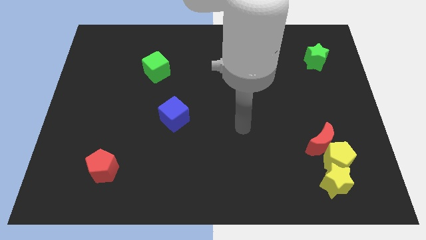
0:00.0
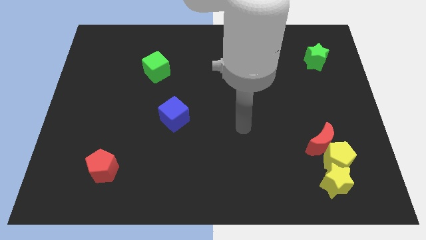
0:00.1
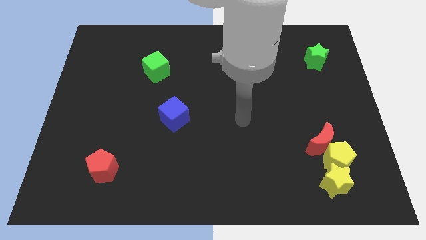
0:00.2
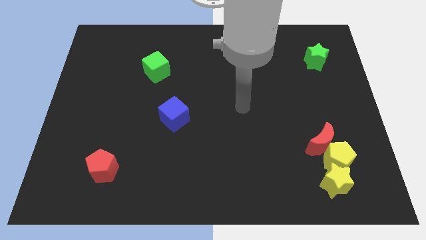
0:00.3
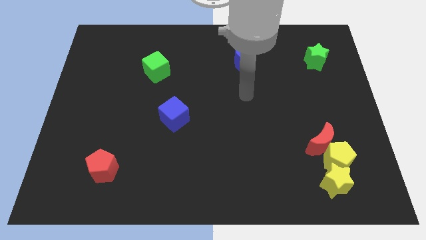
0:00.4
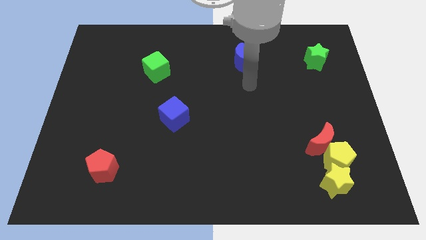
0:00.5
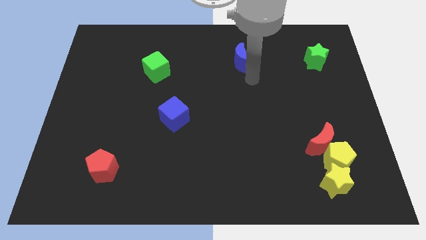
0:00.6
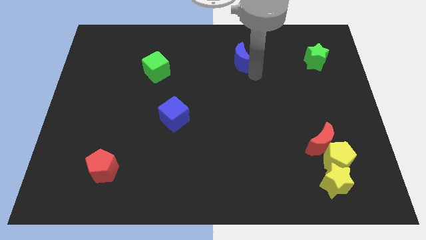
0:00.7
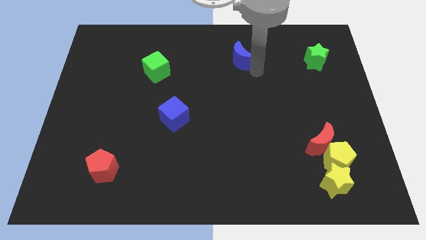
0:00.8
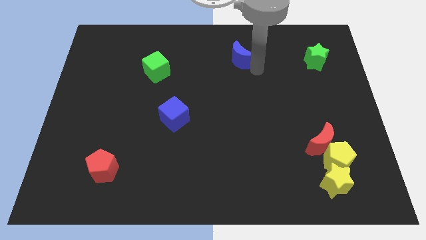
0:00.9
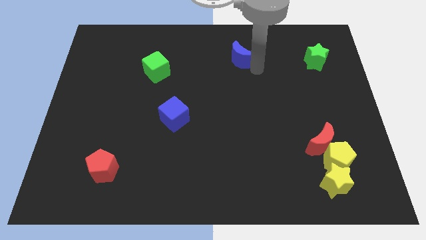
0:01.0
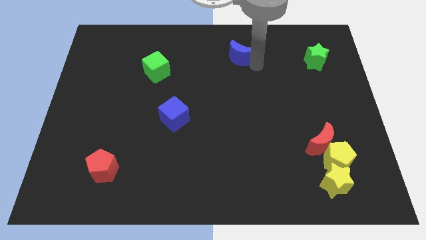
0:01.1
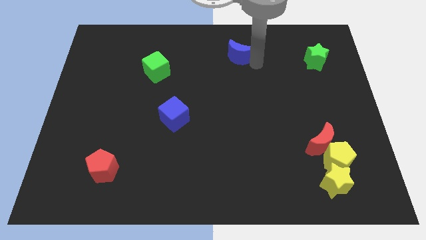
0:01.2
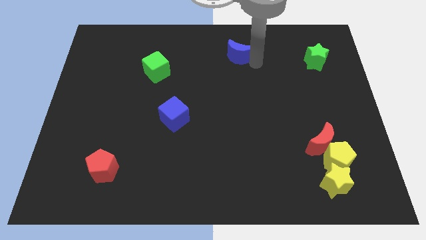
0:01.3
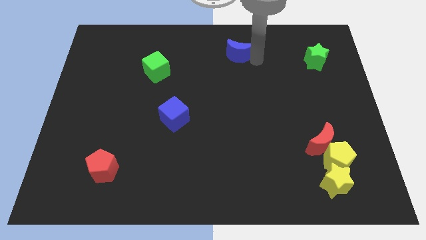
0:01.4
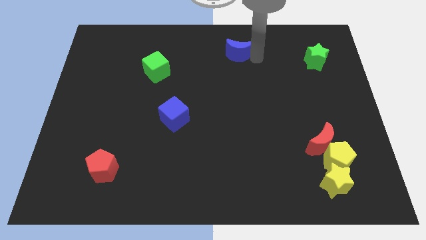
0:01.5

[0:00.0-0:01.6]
slide the blue moon horizontally to the left side of the green star

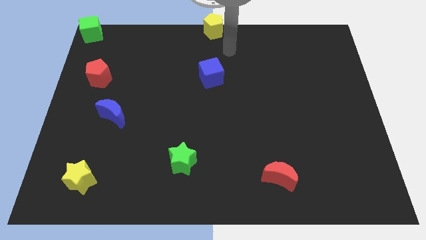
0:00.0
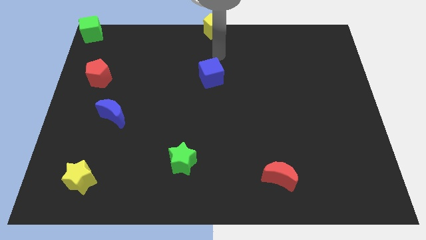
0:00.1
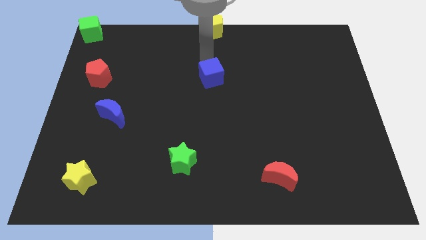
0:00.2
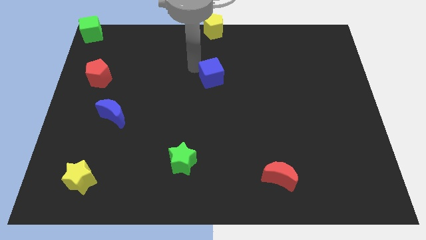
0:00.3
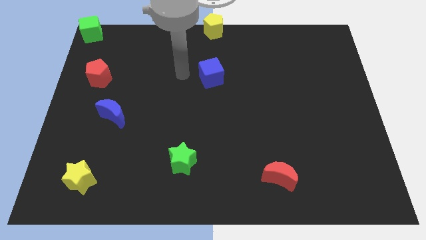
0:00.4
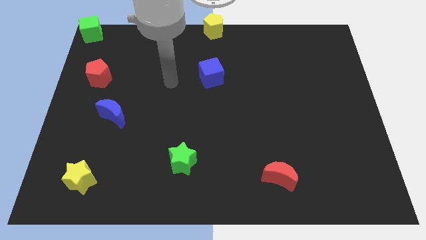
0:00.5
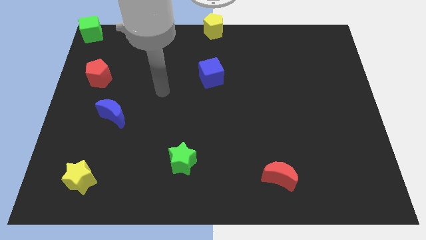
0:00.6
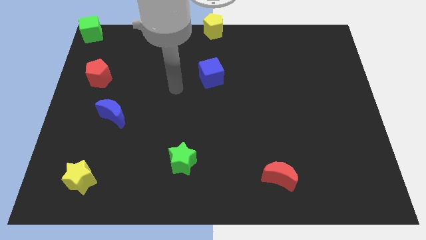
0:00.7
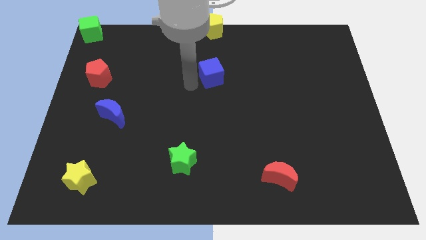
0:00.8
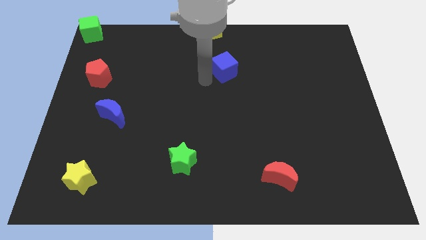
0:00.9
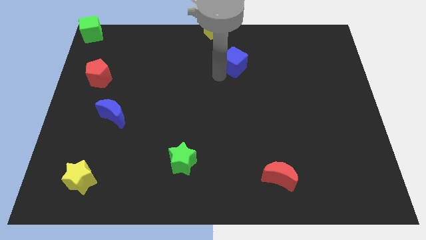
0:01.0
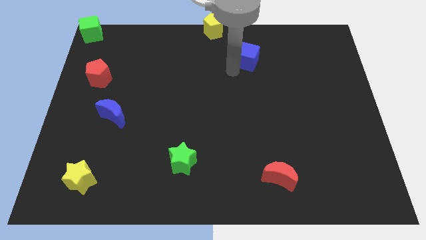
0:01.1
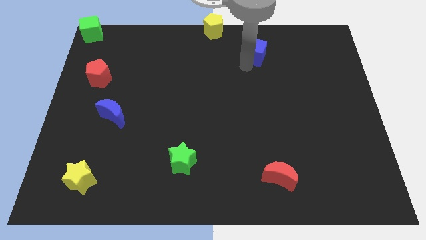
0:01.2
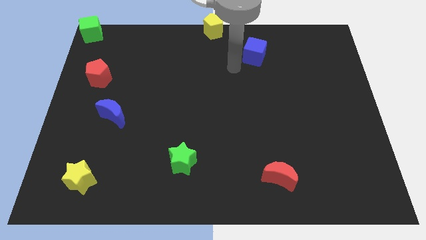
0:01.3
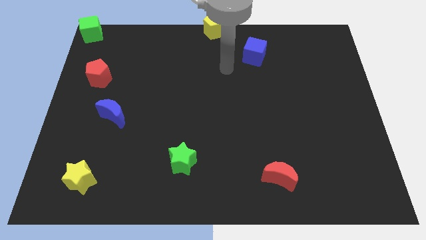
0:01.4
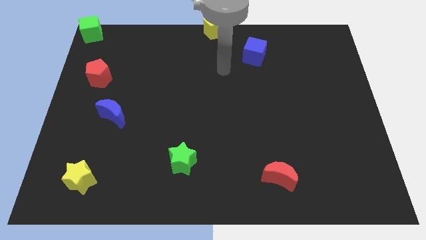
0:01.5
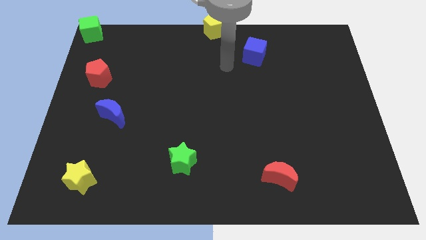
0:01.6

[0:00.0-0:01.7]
push the blue cube to the right side

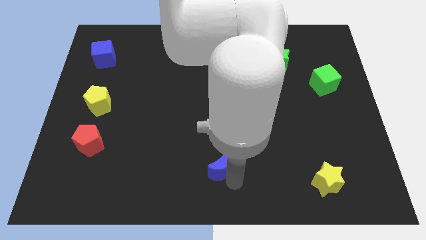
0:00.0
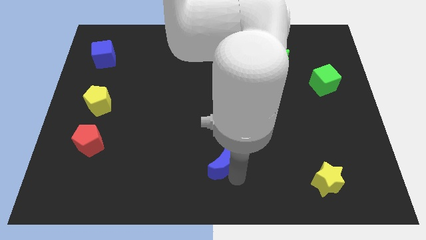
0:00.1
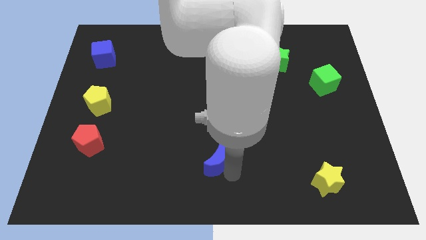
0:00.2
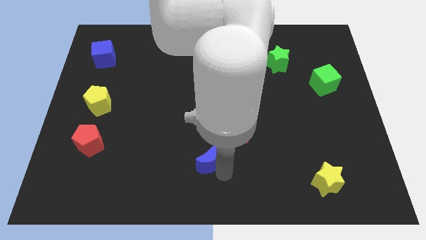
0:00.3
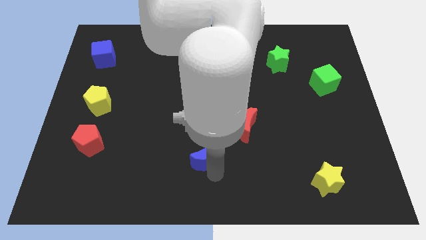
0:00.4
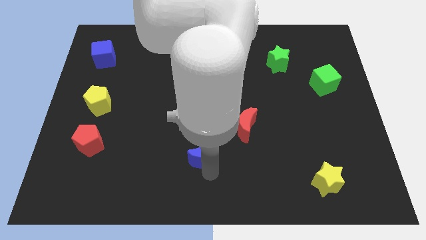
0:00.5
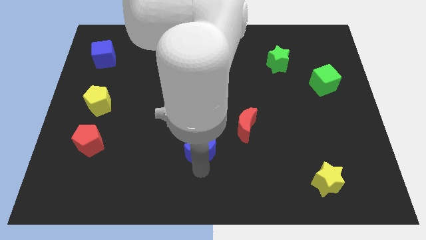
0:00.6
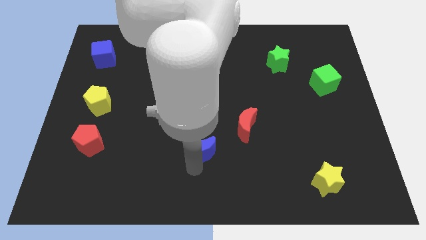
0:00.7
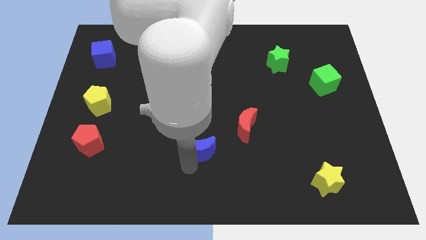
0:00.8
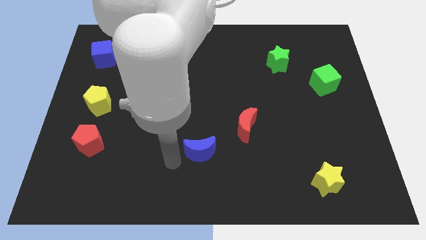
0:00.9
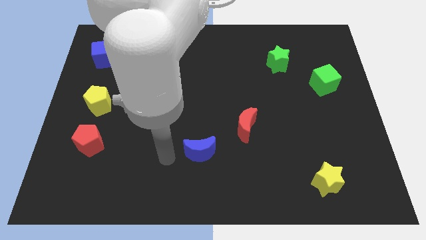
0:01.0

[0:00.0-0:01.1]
place blue moon to the bottom left of red moon

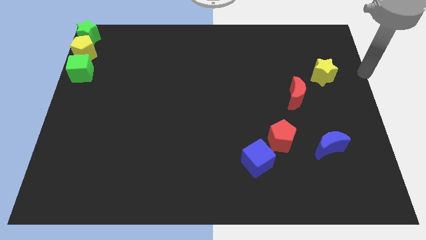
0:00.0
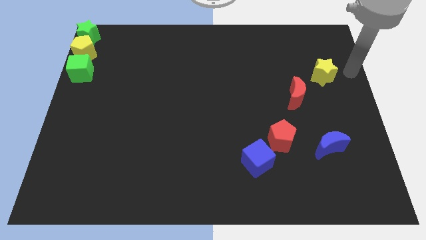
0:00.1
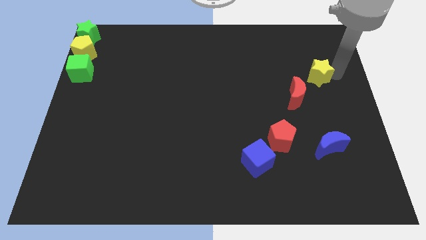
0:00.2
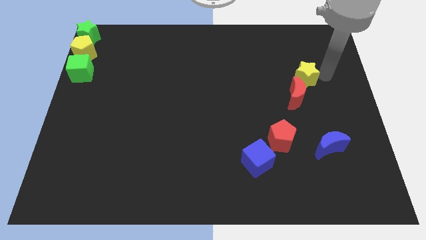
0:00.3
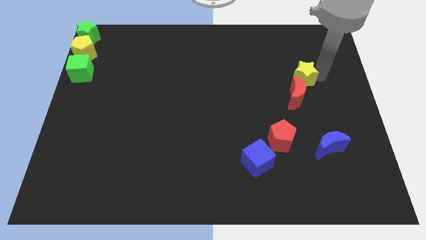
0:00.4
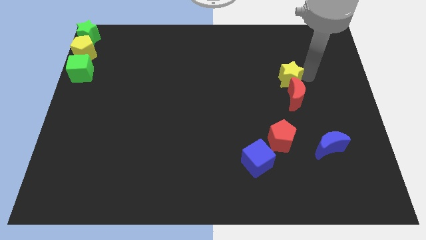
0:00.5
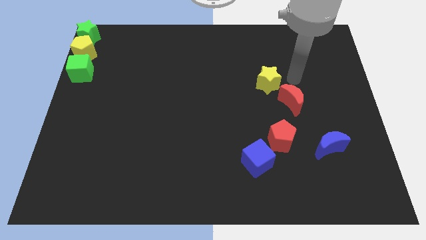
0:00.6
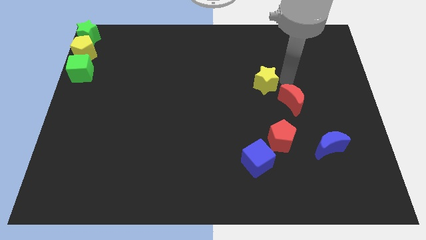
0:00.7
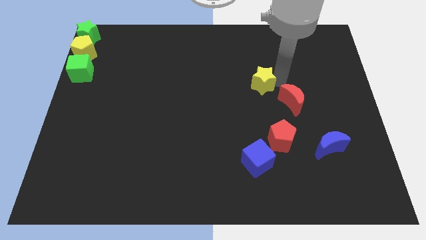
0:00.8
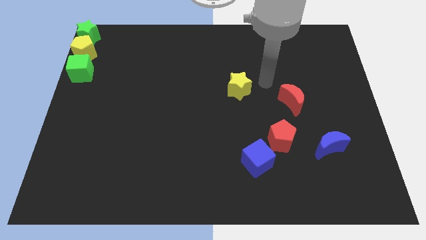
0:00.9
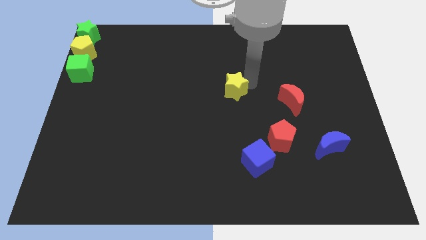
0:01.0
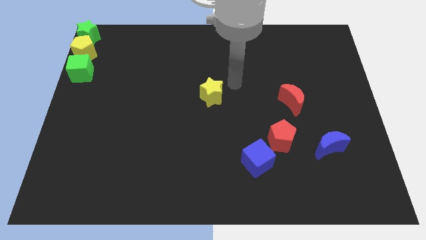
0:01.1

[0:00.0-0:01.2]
move the yellow star towards the center

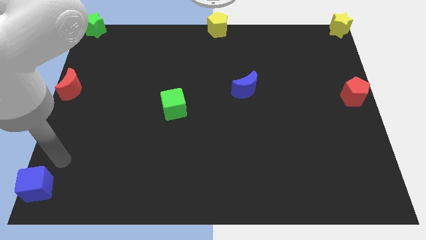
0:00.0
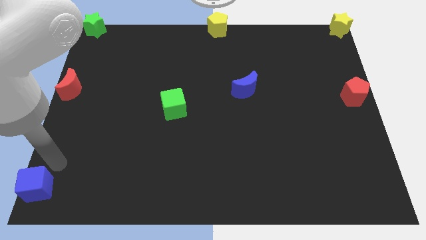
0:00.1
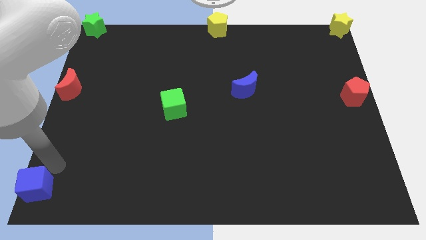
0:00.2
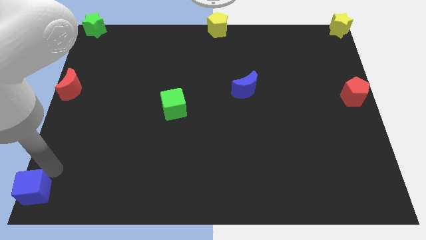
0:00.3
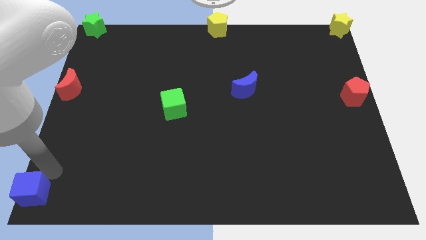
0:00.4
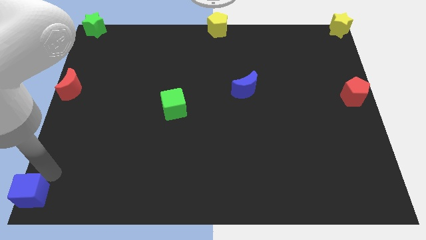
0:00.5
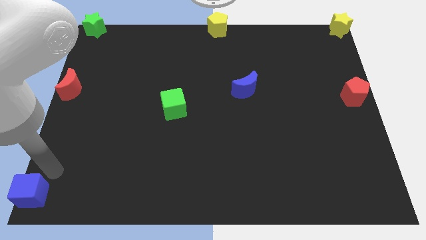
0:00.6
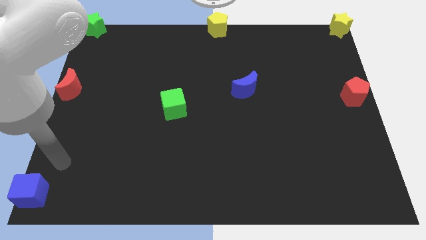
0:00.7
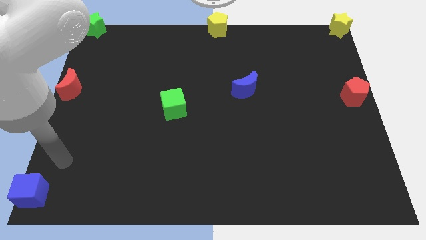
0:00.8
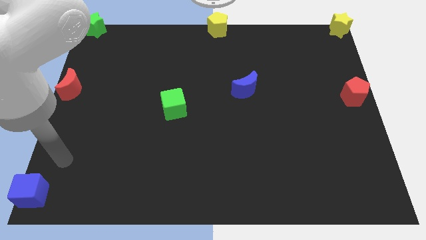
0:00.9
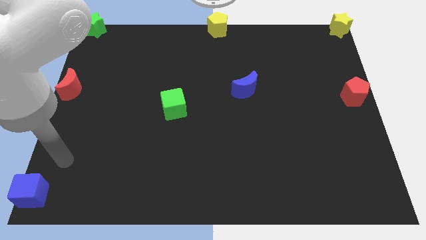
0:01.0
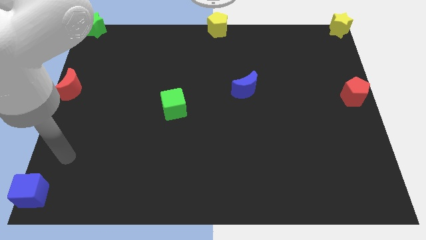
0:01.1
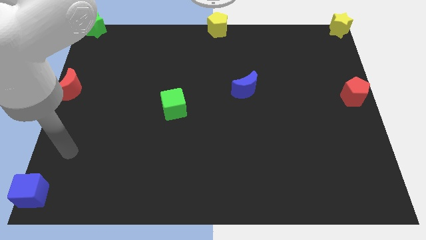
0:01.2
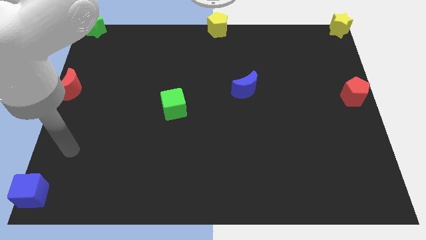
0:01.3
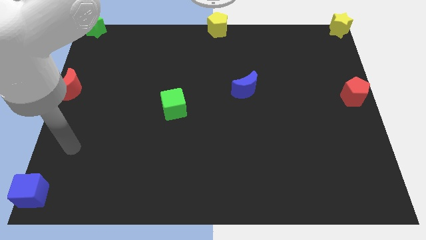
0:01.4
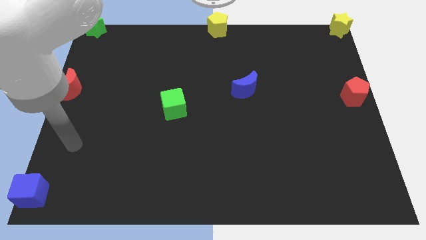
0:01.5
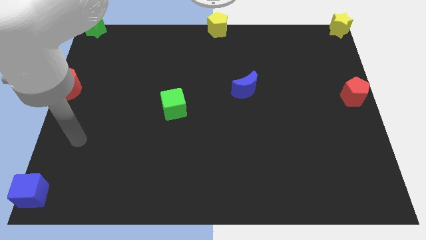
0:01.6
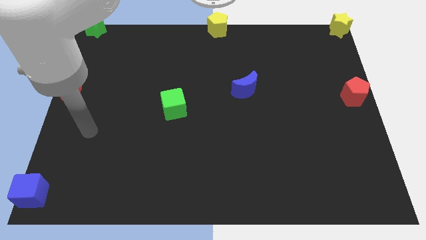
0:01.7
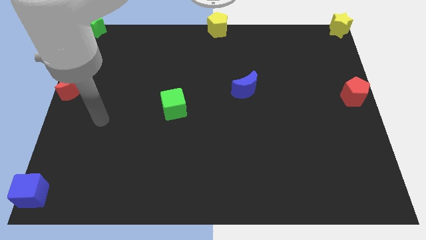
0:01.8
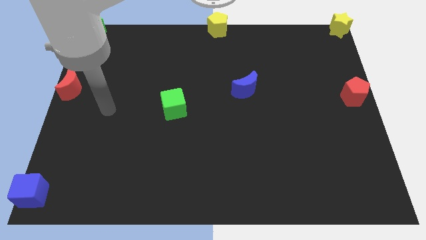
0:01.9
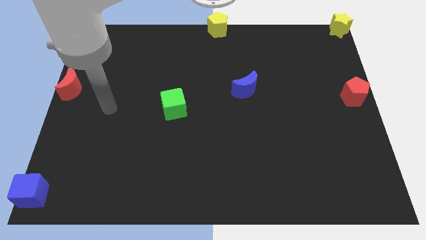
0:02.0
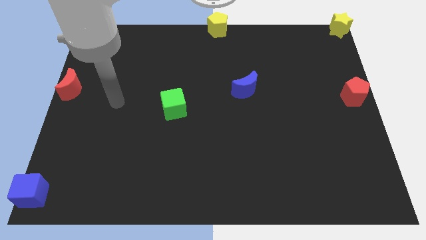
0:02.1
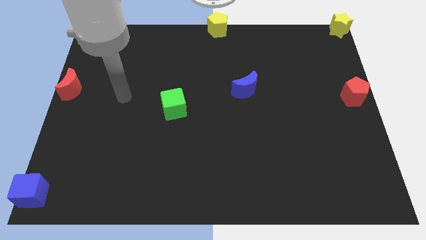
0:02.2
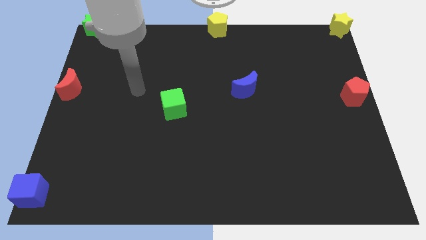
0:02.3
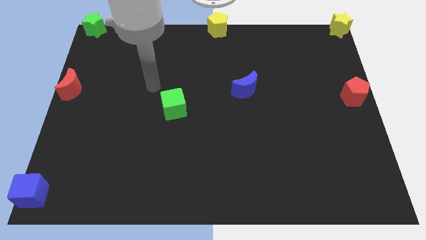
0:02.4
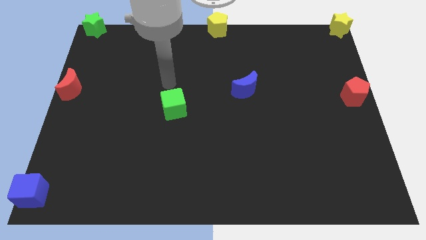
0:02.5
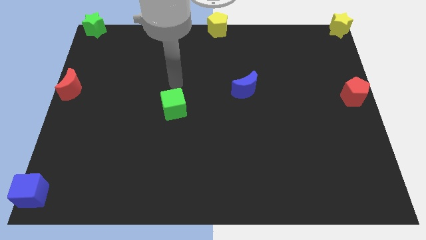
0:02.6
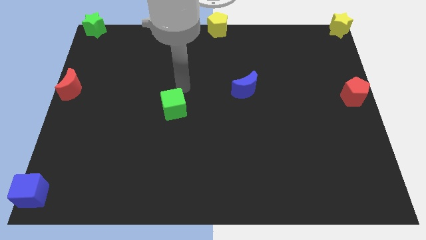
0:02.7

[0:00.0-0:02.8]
touch the green cube with your arm

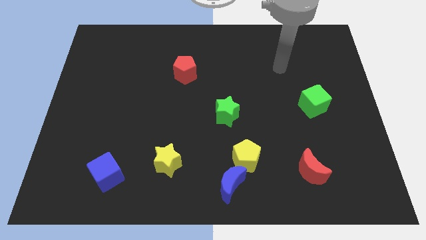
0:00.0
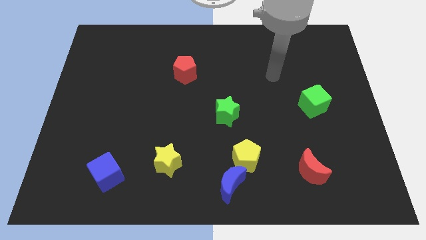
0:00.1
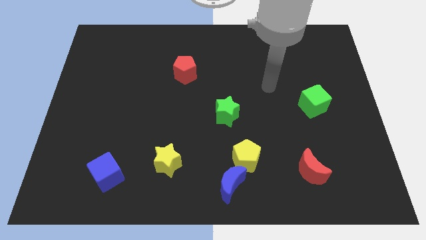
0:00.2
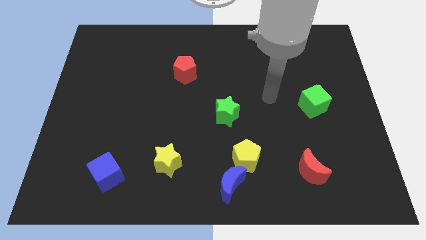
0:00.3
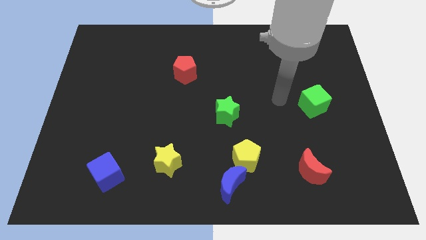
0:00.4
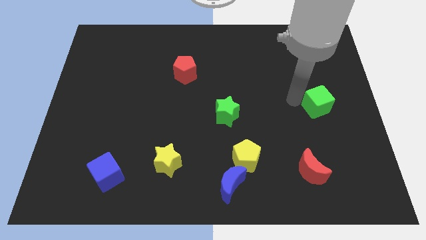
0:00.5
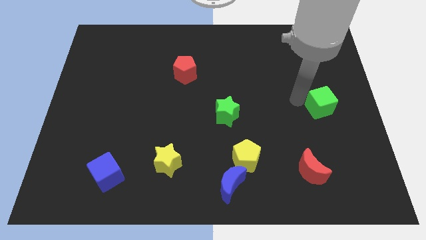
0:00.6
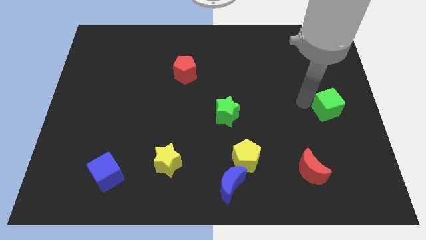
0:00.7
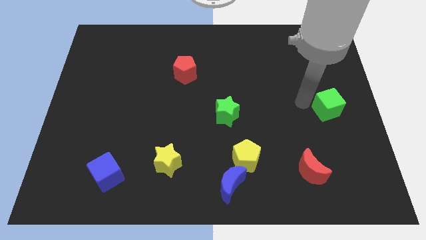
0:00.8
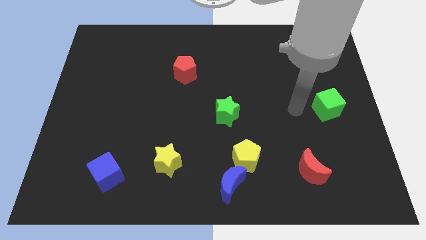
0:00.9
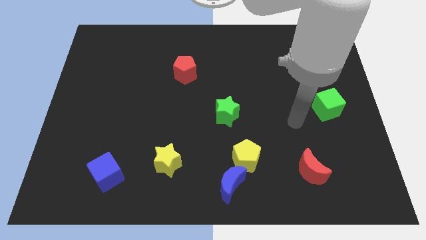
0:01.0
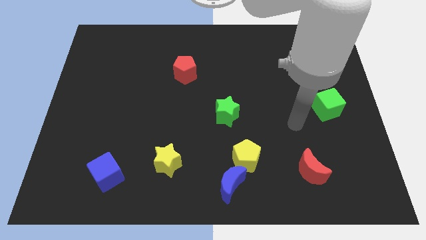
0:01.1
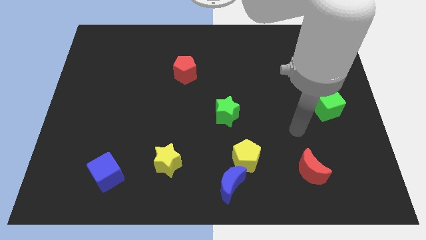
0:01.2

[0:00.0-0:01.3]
move the green cube slightly towards right
